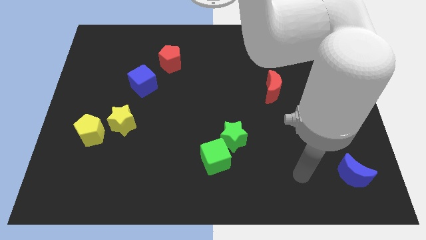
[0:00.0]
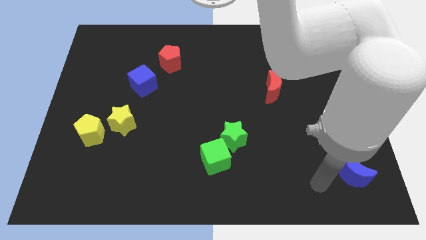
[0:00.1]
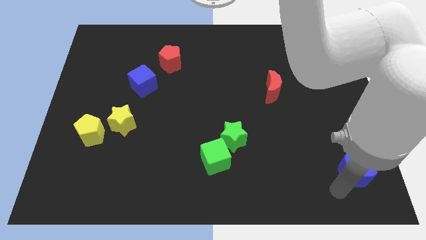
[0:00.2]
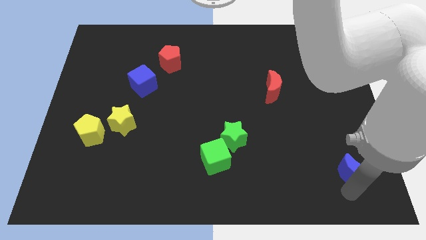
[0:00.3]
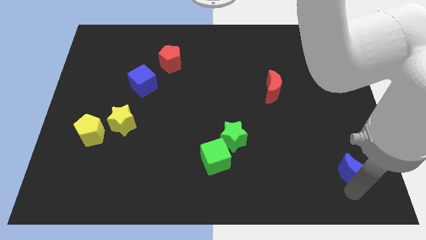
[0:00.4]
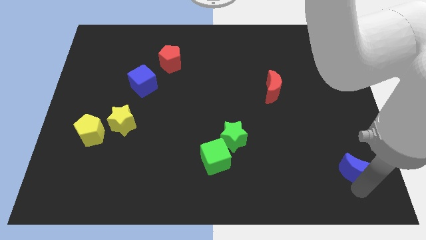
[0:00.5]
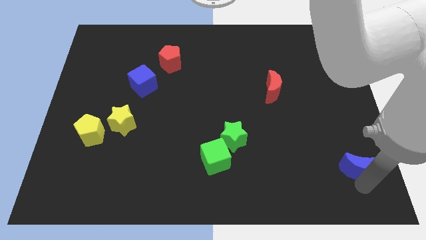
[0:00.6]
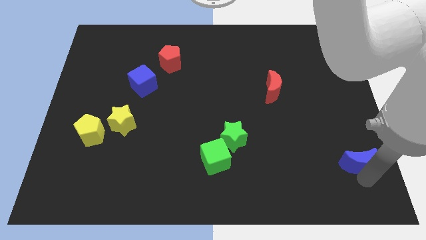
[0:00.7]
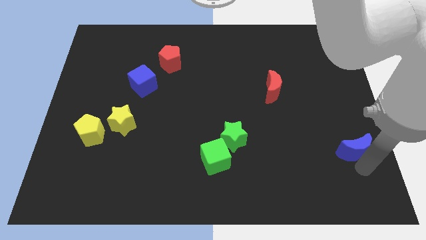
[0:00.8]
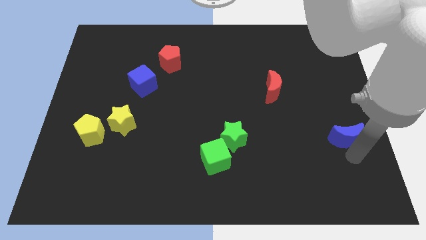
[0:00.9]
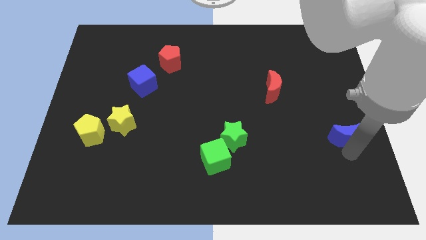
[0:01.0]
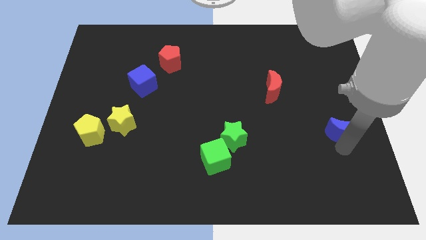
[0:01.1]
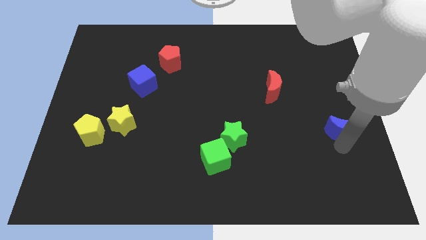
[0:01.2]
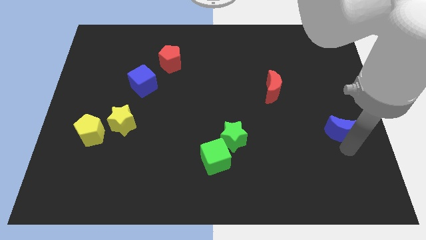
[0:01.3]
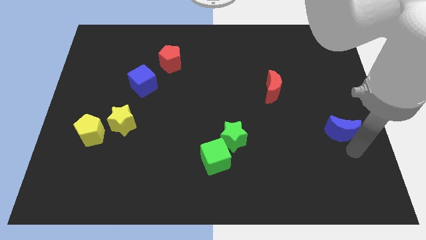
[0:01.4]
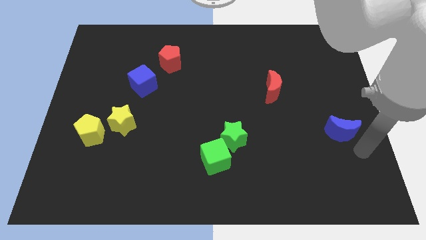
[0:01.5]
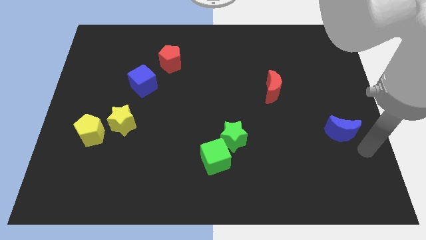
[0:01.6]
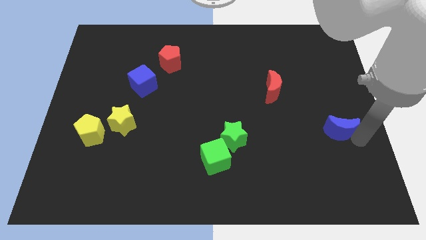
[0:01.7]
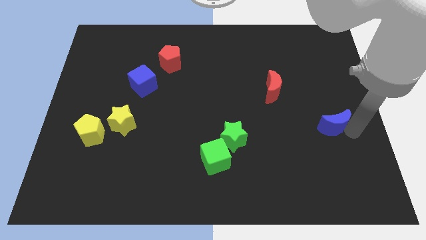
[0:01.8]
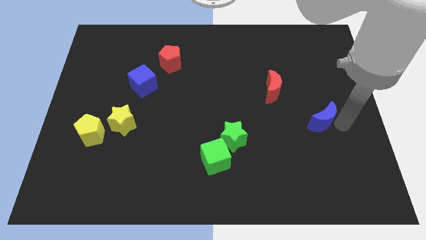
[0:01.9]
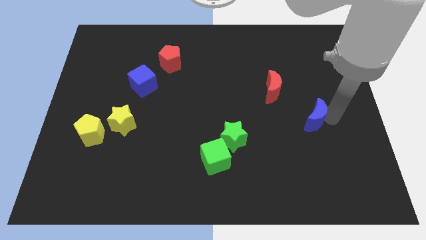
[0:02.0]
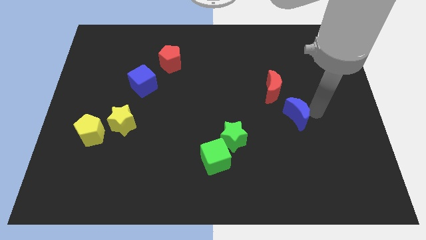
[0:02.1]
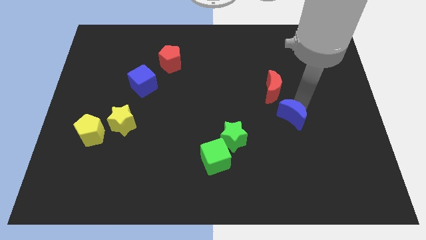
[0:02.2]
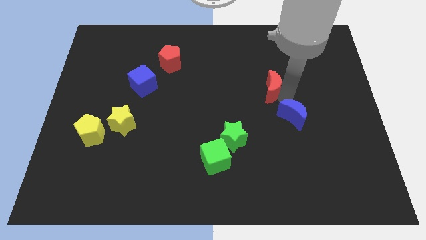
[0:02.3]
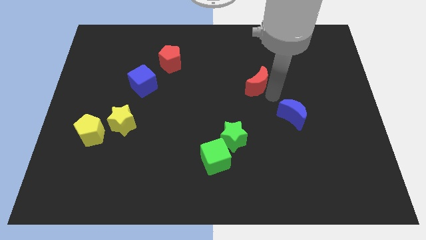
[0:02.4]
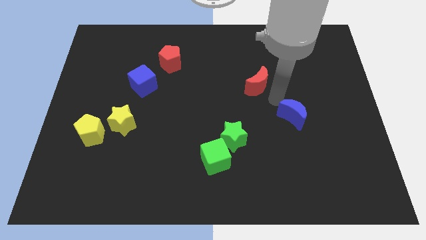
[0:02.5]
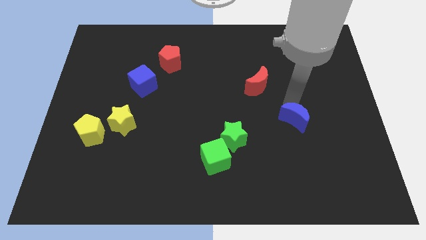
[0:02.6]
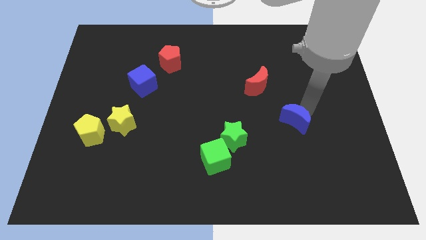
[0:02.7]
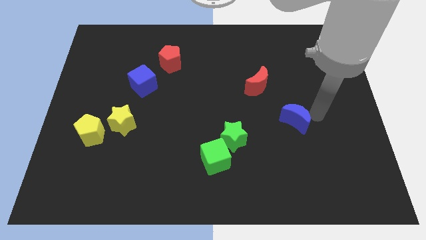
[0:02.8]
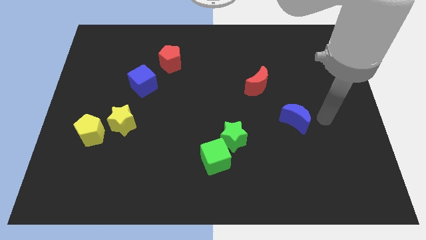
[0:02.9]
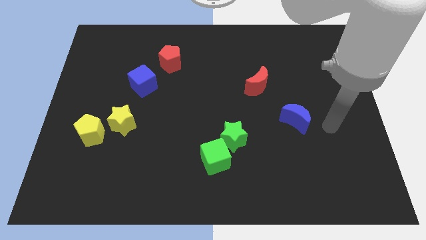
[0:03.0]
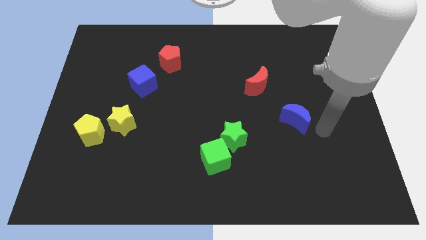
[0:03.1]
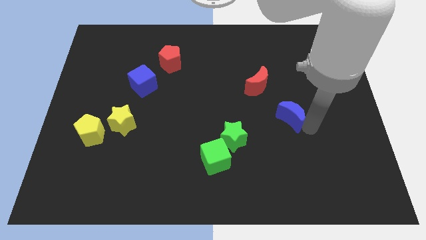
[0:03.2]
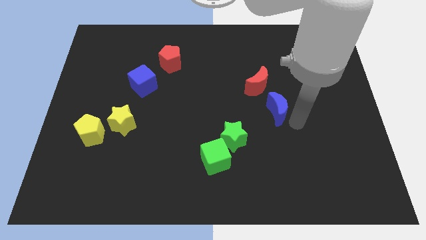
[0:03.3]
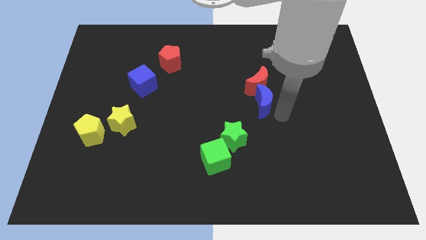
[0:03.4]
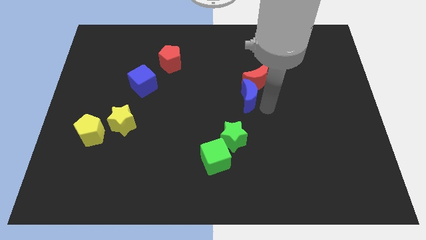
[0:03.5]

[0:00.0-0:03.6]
push the blue crescent into the red crescent

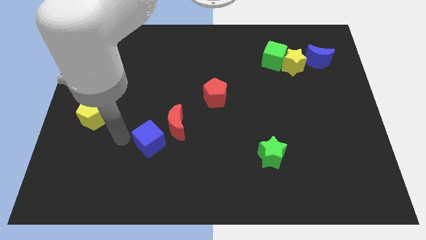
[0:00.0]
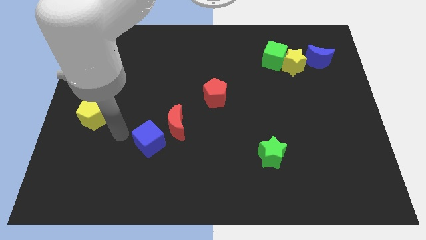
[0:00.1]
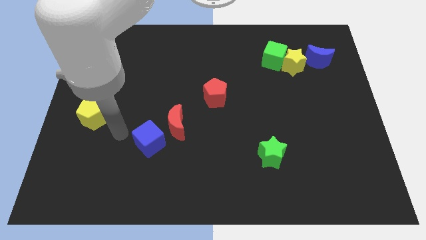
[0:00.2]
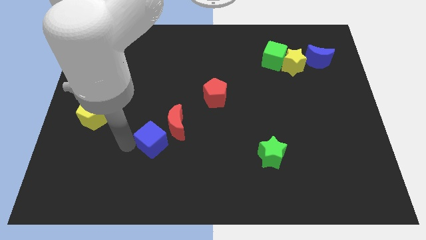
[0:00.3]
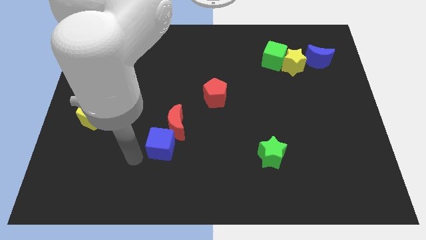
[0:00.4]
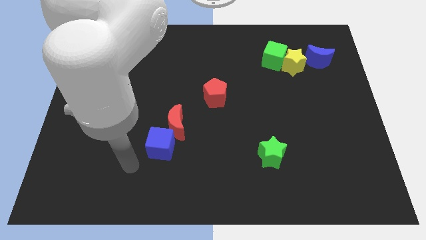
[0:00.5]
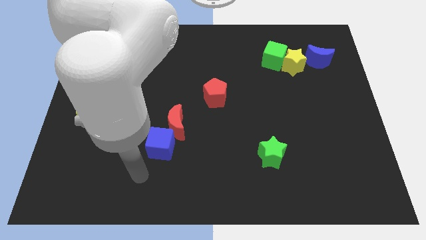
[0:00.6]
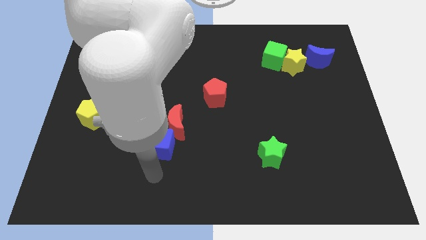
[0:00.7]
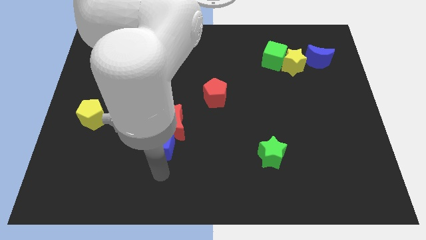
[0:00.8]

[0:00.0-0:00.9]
place blue cube at the bottom of red moon

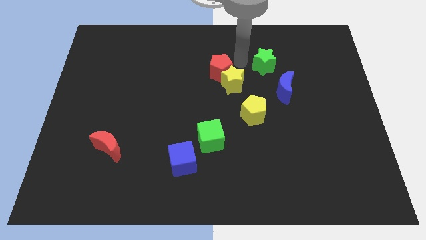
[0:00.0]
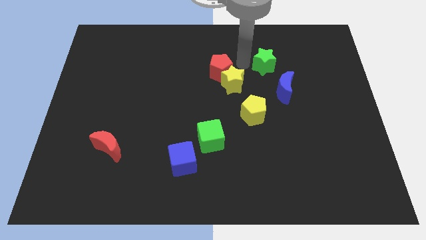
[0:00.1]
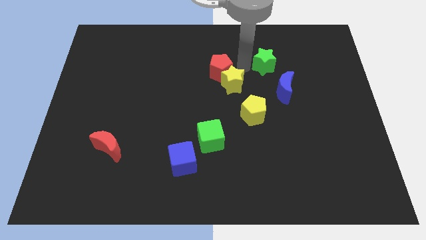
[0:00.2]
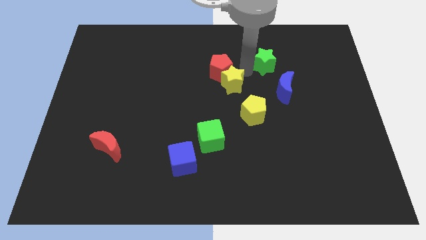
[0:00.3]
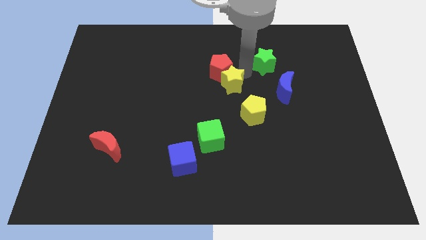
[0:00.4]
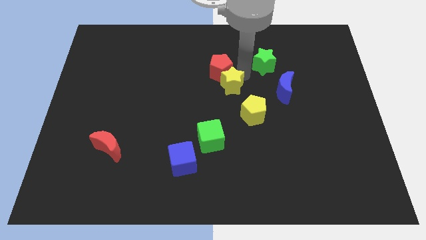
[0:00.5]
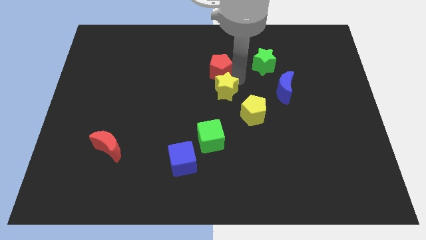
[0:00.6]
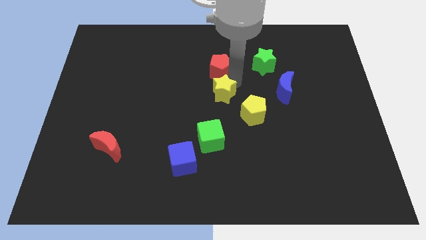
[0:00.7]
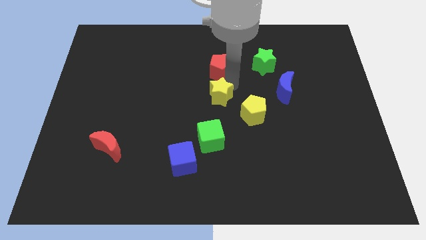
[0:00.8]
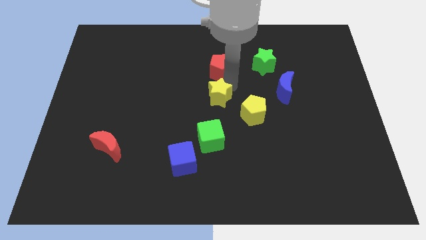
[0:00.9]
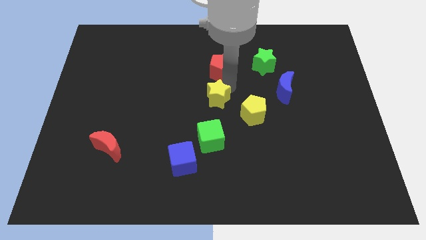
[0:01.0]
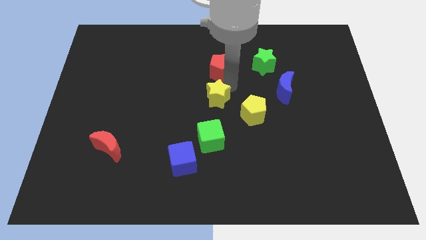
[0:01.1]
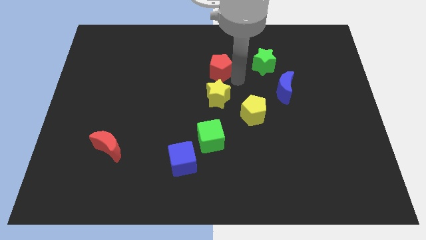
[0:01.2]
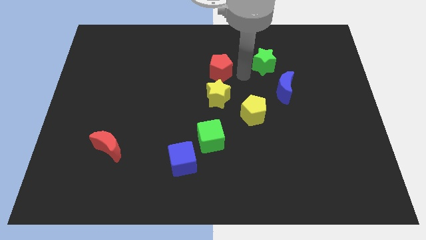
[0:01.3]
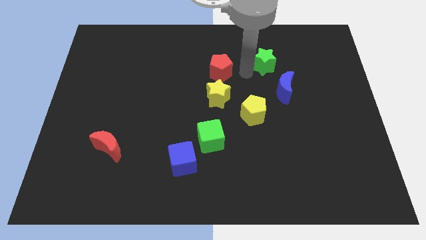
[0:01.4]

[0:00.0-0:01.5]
separate the yellow star from the red pentagon

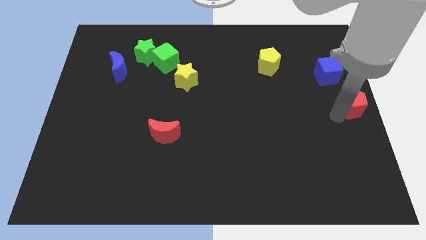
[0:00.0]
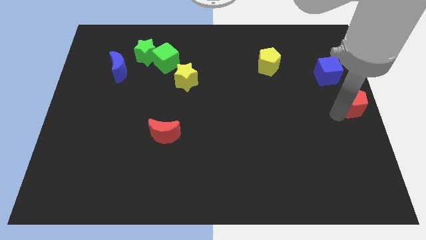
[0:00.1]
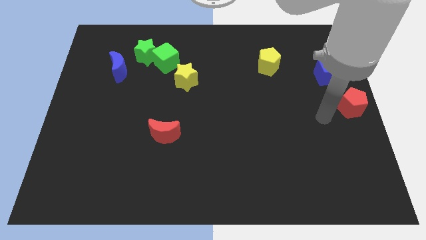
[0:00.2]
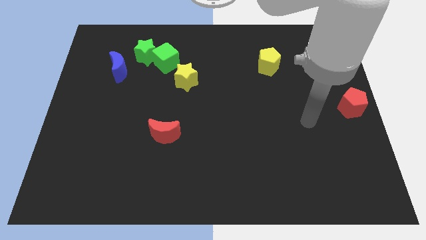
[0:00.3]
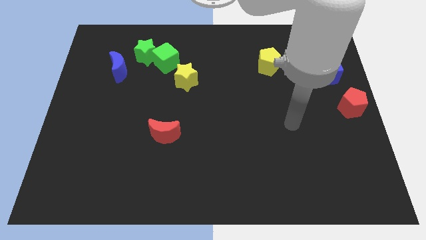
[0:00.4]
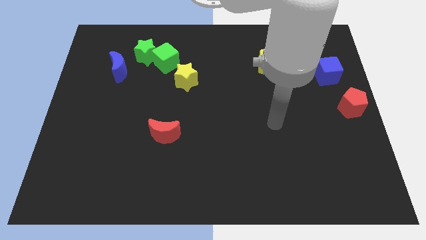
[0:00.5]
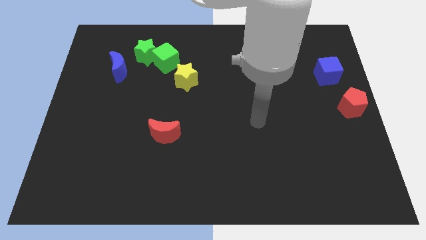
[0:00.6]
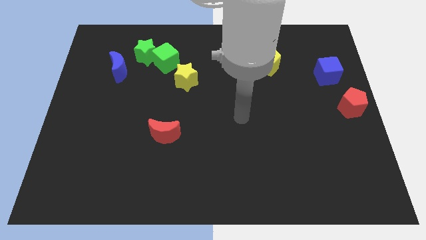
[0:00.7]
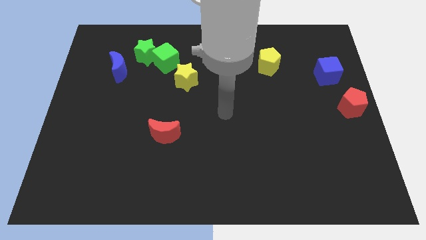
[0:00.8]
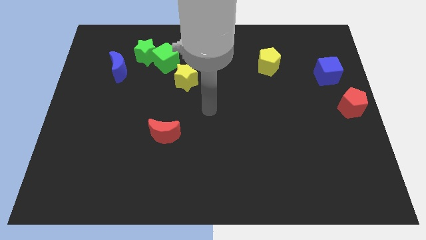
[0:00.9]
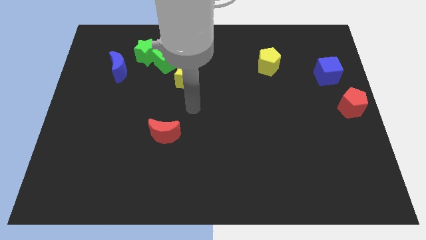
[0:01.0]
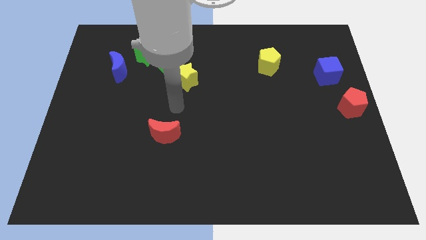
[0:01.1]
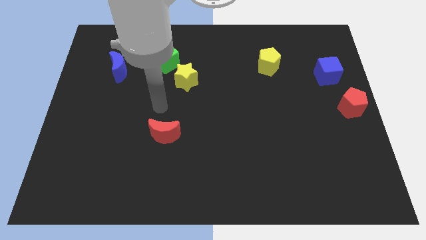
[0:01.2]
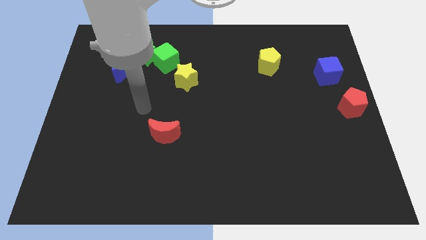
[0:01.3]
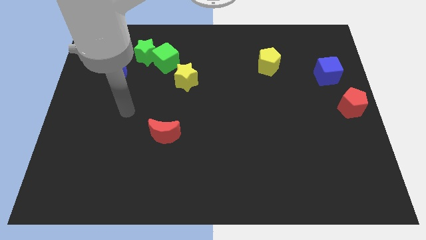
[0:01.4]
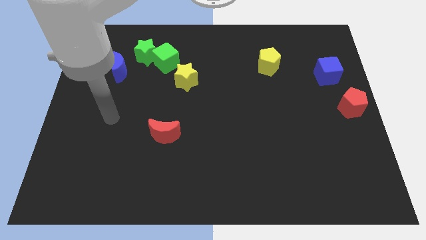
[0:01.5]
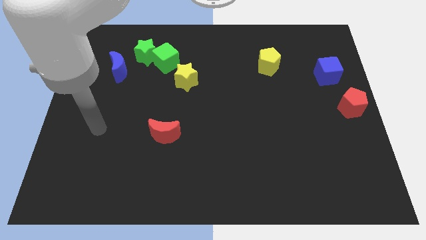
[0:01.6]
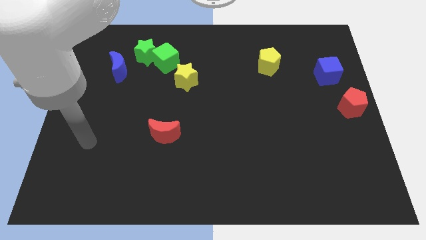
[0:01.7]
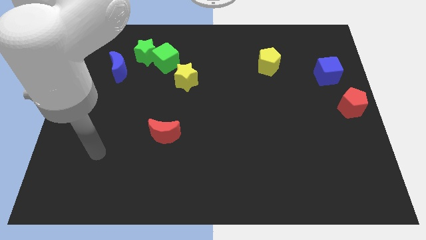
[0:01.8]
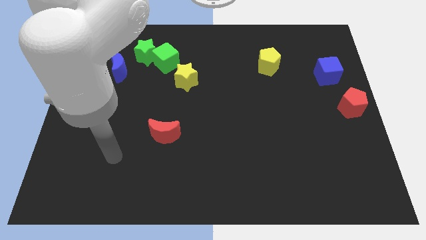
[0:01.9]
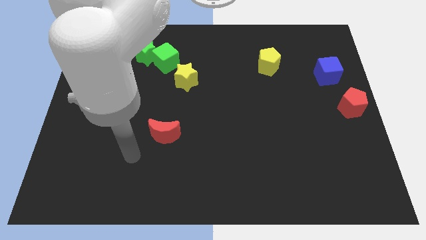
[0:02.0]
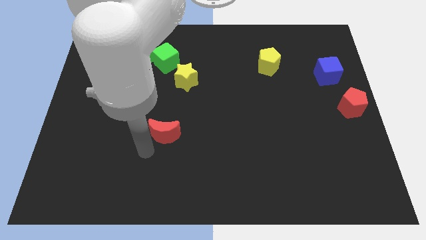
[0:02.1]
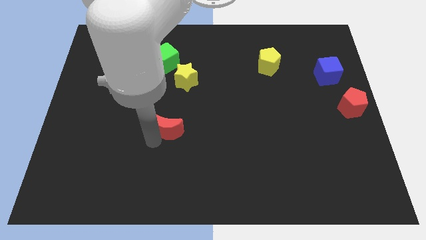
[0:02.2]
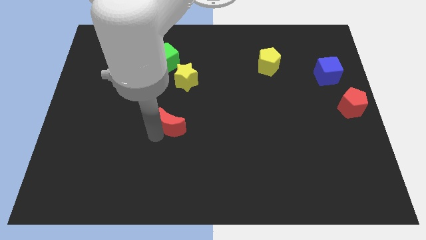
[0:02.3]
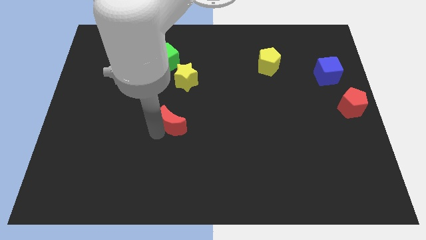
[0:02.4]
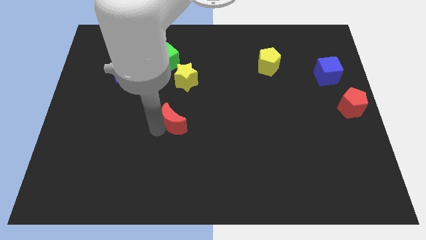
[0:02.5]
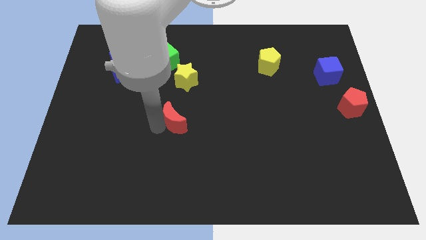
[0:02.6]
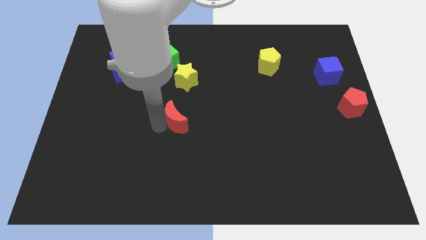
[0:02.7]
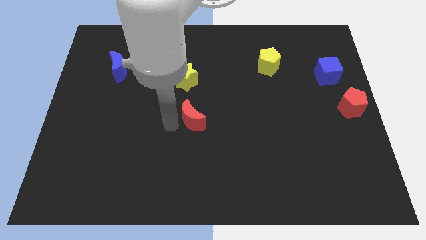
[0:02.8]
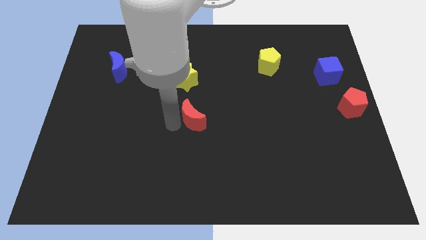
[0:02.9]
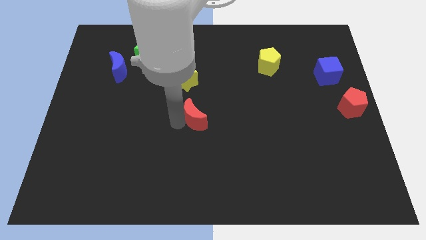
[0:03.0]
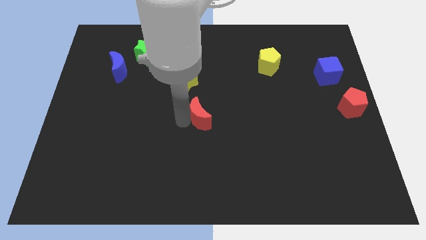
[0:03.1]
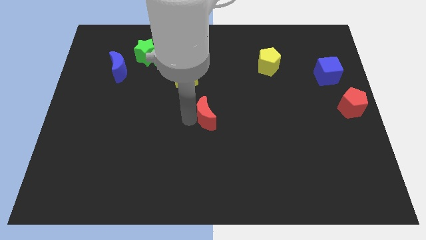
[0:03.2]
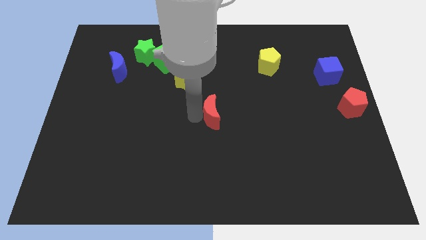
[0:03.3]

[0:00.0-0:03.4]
move the arm away from the red pentagon
